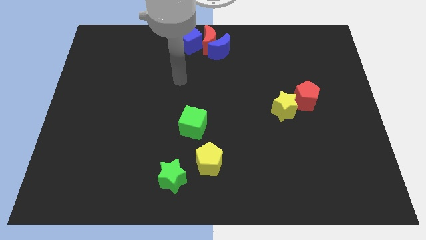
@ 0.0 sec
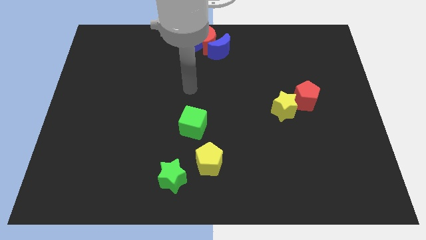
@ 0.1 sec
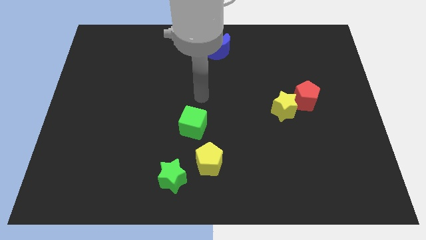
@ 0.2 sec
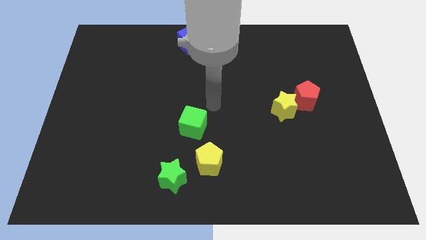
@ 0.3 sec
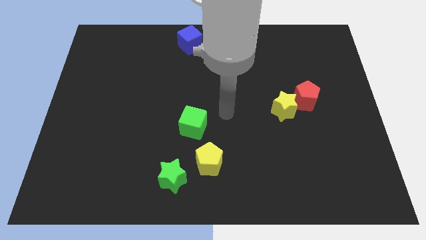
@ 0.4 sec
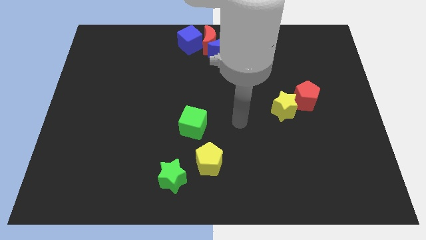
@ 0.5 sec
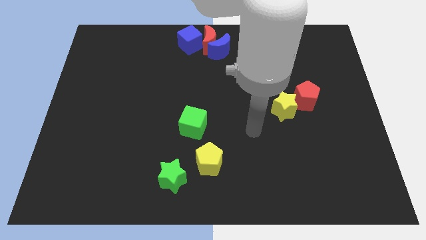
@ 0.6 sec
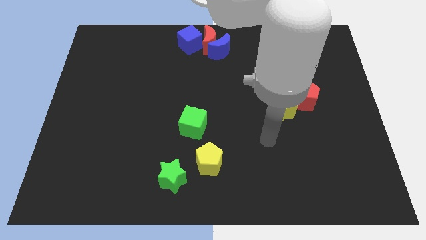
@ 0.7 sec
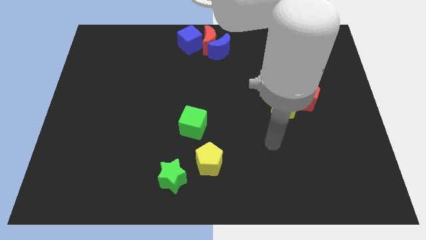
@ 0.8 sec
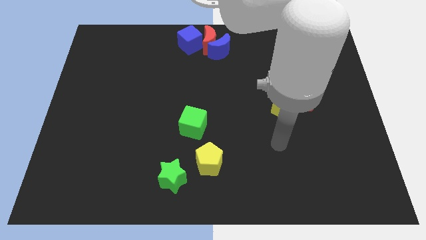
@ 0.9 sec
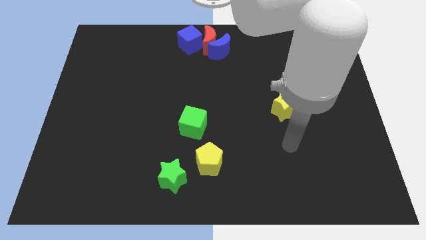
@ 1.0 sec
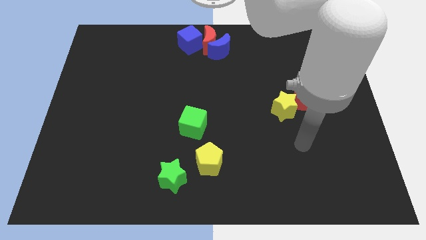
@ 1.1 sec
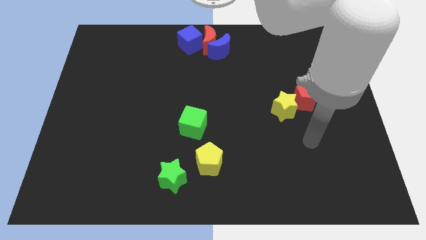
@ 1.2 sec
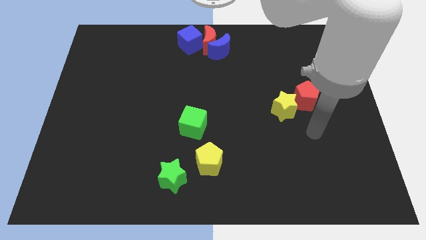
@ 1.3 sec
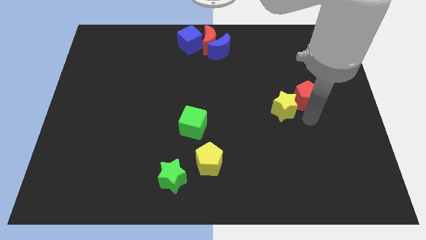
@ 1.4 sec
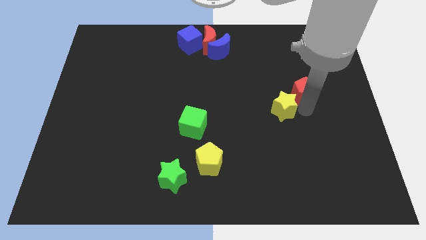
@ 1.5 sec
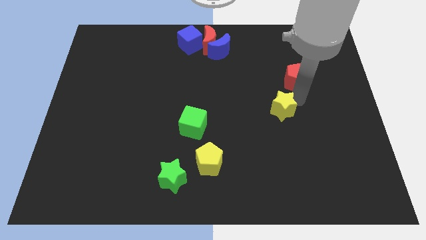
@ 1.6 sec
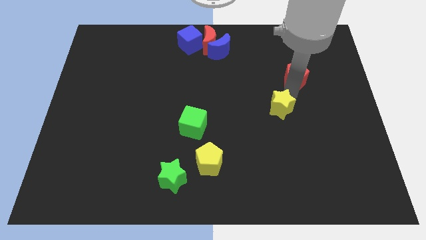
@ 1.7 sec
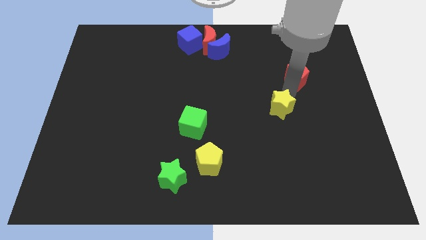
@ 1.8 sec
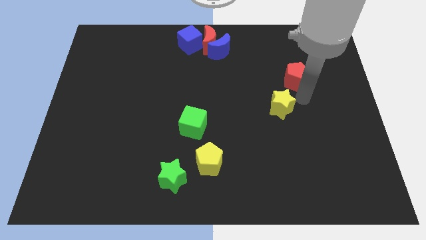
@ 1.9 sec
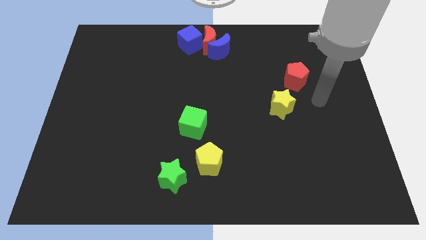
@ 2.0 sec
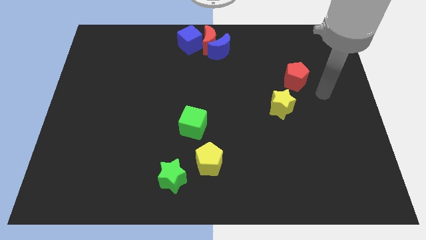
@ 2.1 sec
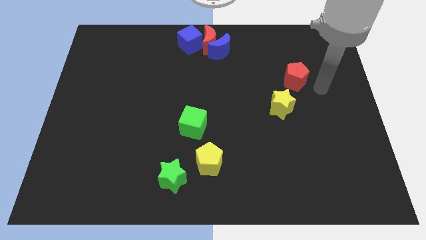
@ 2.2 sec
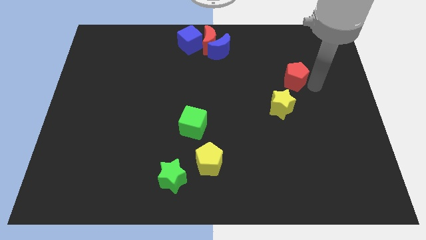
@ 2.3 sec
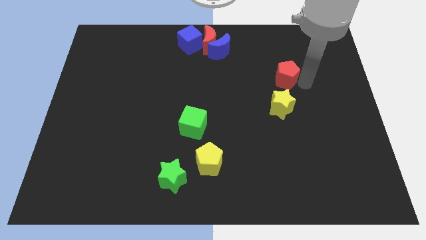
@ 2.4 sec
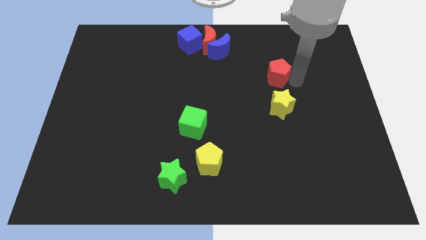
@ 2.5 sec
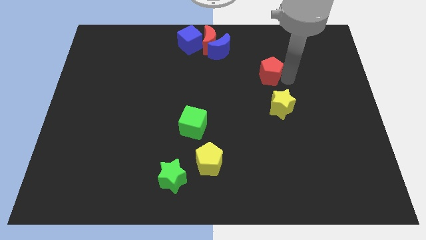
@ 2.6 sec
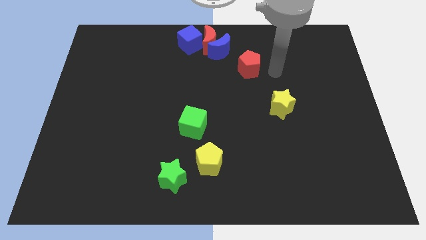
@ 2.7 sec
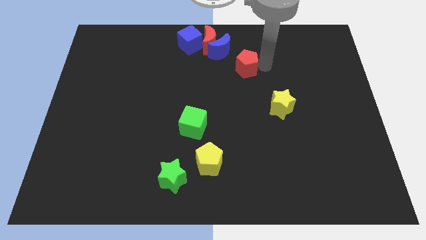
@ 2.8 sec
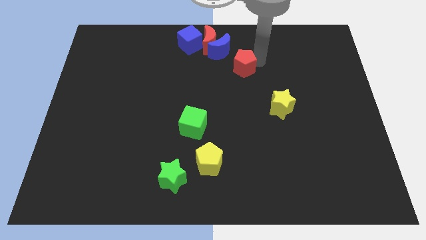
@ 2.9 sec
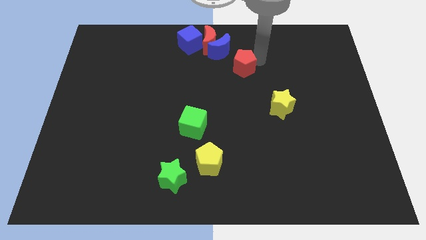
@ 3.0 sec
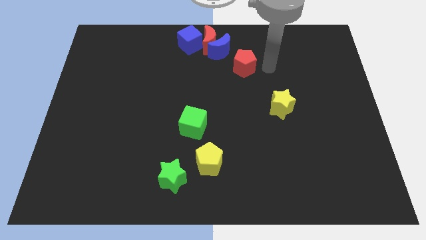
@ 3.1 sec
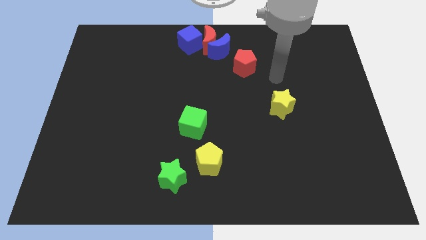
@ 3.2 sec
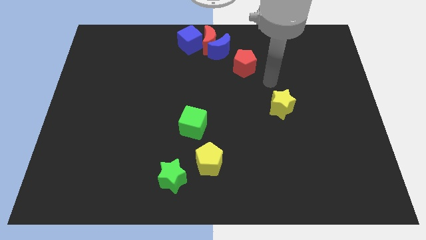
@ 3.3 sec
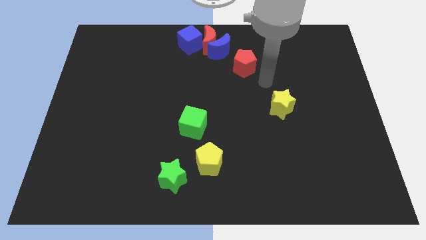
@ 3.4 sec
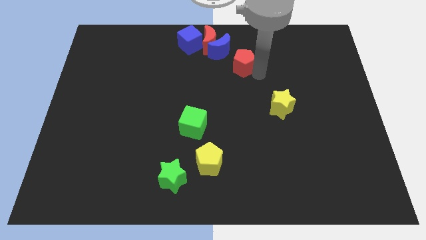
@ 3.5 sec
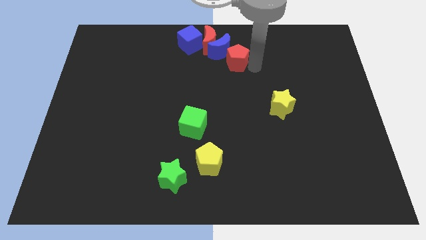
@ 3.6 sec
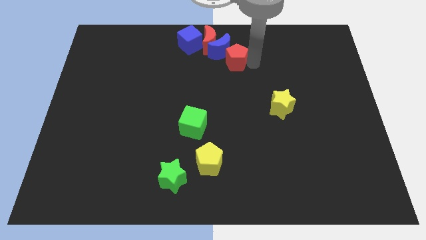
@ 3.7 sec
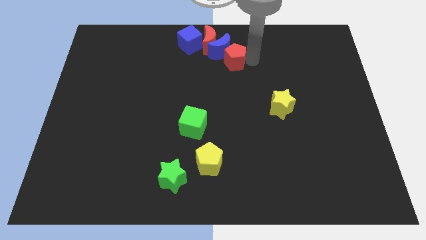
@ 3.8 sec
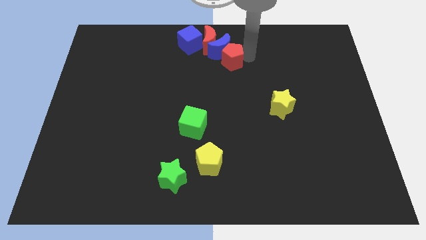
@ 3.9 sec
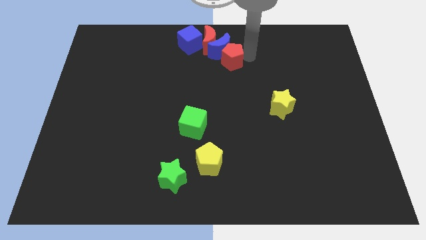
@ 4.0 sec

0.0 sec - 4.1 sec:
push red pentagon into group of blocks

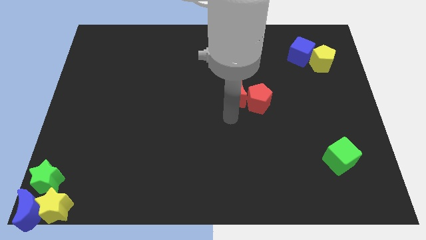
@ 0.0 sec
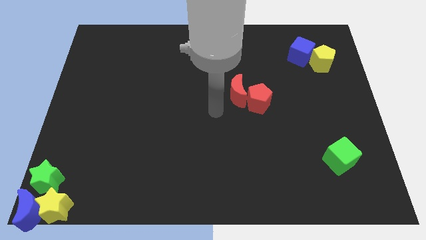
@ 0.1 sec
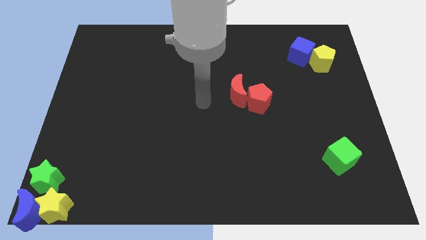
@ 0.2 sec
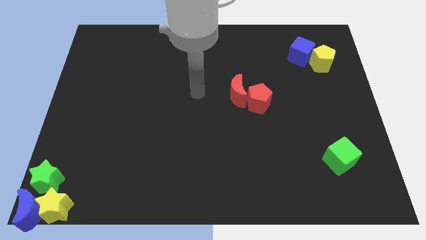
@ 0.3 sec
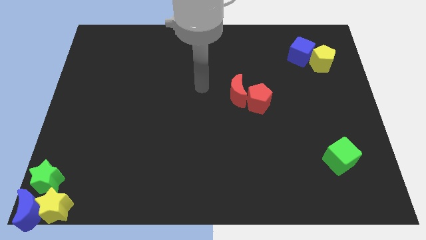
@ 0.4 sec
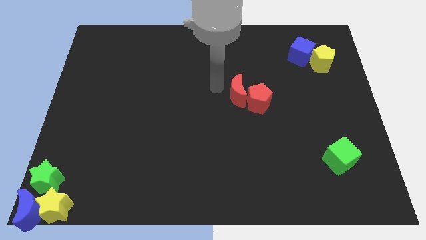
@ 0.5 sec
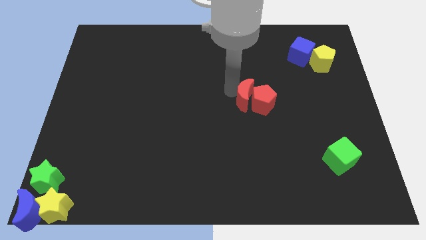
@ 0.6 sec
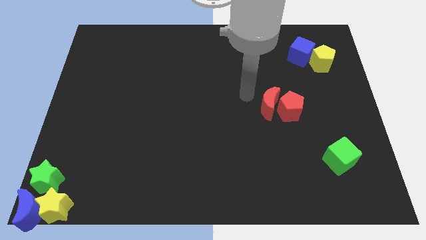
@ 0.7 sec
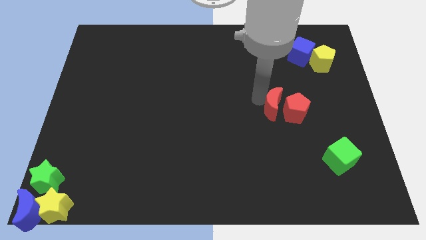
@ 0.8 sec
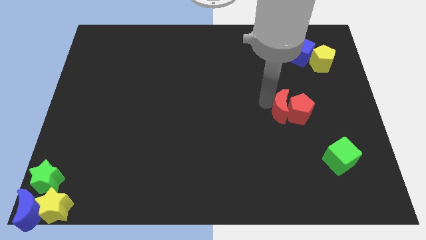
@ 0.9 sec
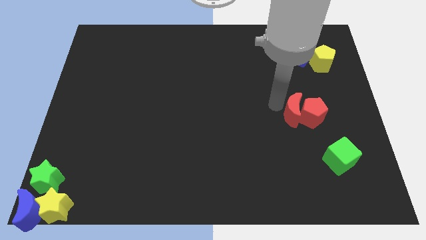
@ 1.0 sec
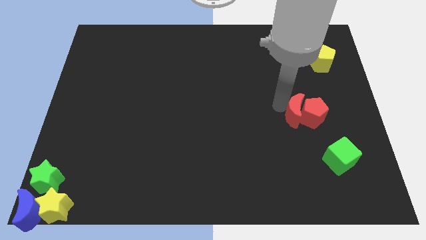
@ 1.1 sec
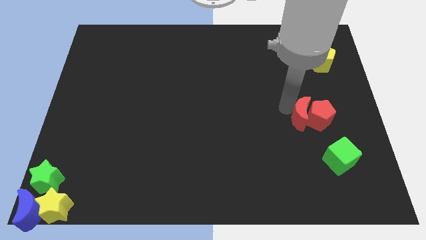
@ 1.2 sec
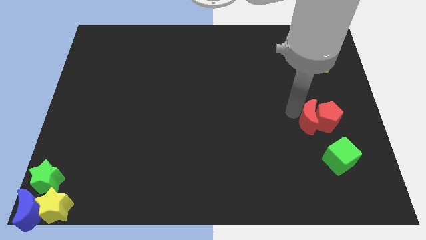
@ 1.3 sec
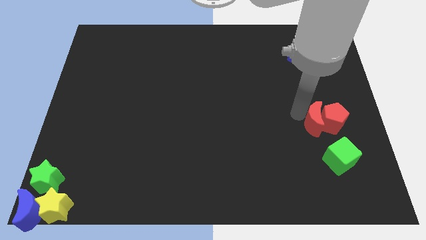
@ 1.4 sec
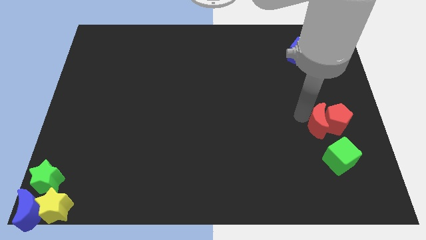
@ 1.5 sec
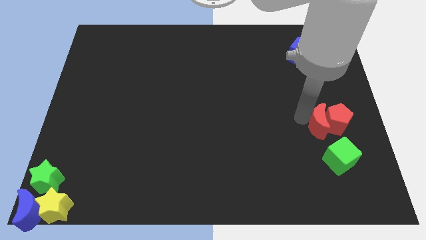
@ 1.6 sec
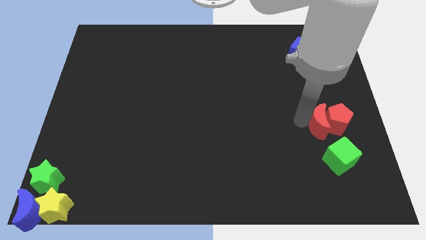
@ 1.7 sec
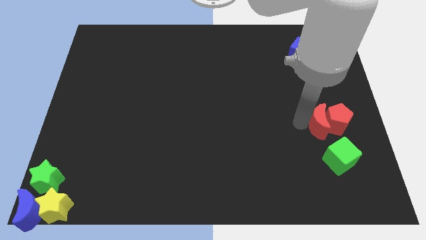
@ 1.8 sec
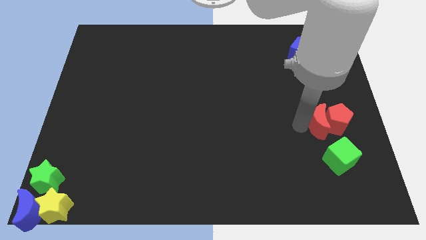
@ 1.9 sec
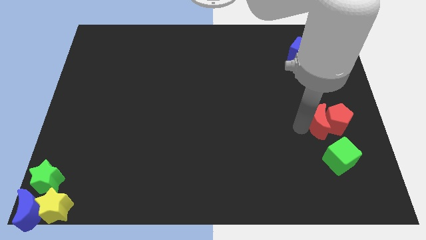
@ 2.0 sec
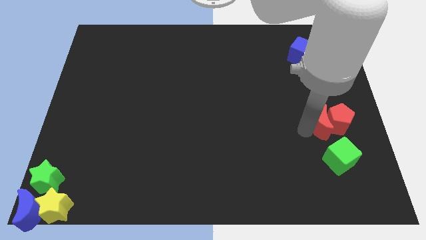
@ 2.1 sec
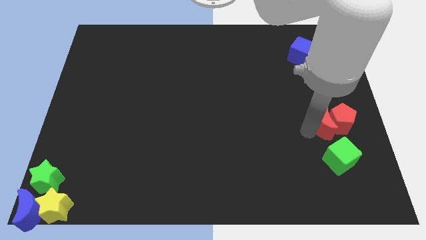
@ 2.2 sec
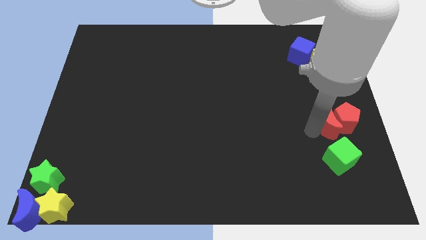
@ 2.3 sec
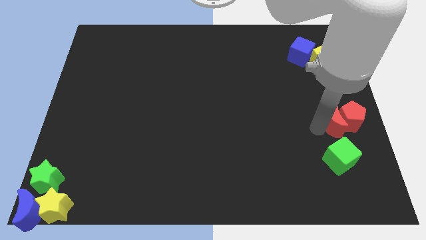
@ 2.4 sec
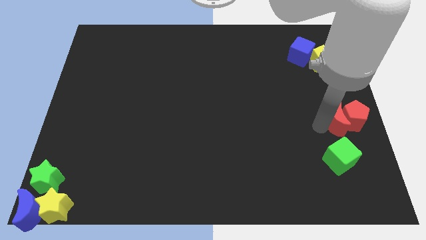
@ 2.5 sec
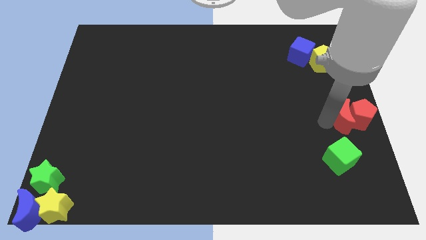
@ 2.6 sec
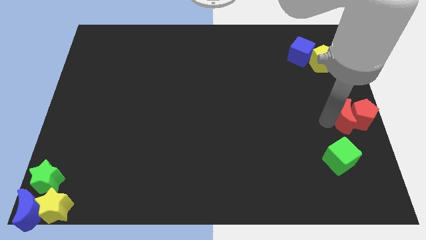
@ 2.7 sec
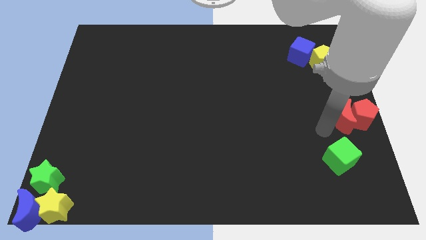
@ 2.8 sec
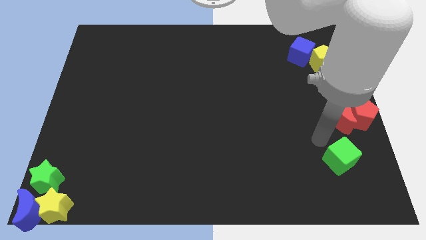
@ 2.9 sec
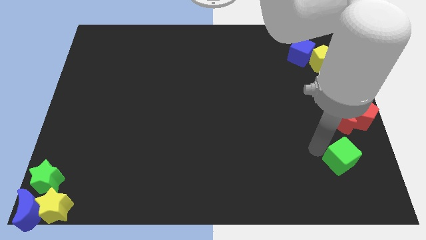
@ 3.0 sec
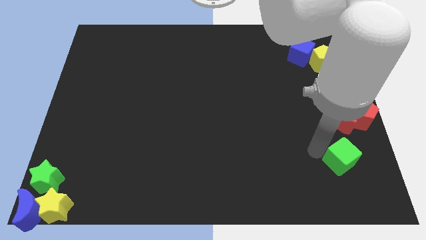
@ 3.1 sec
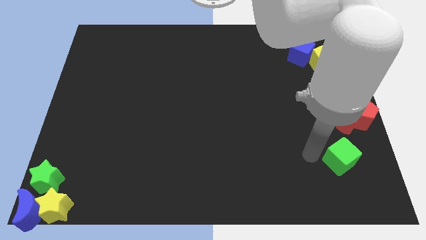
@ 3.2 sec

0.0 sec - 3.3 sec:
move the group of red blocks to the center right

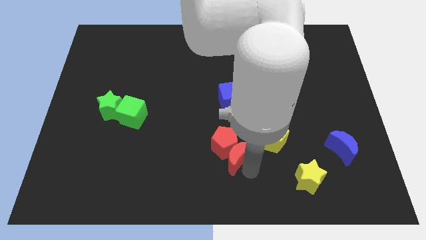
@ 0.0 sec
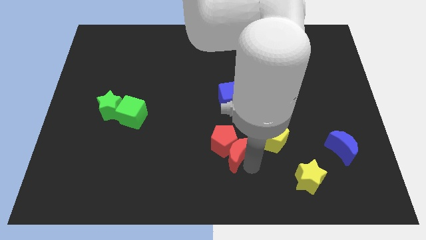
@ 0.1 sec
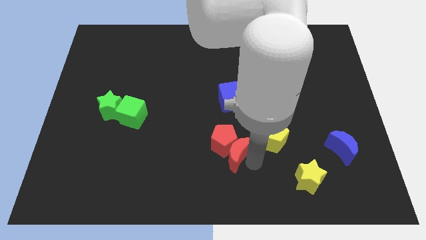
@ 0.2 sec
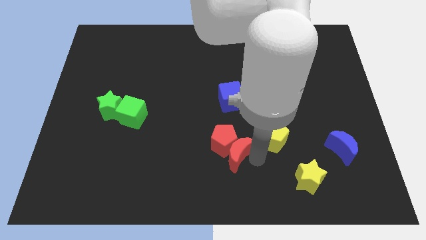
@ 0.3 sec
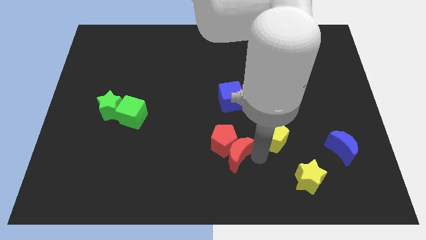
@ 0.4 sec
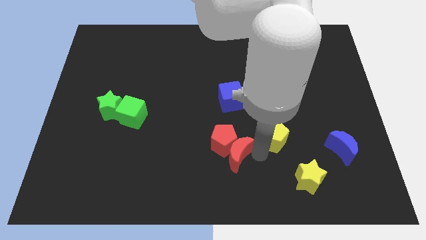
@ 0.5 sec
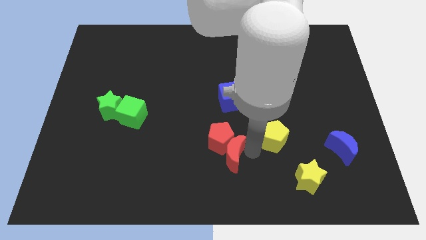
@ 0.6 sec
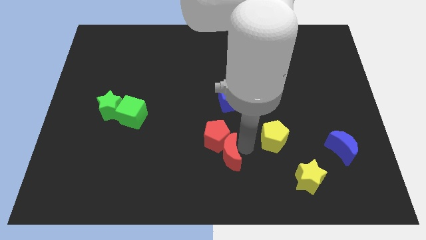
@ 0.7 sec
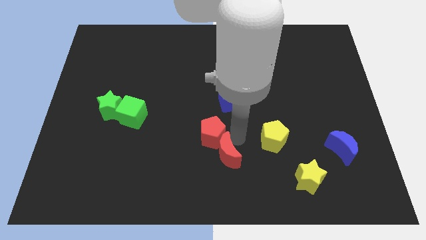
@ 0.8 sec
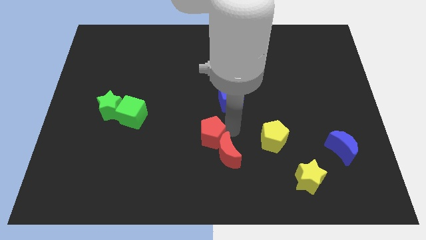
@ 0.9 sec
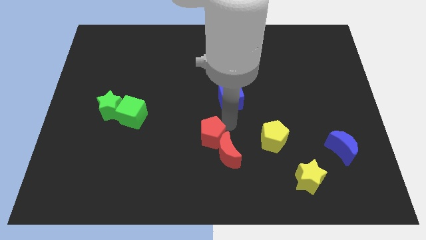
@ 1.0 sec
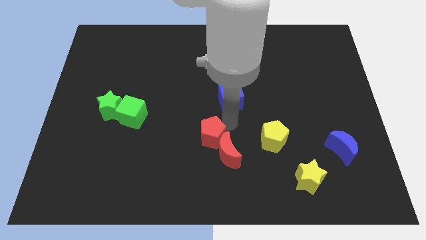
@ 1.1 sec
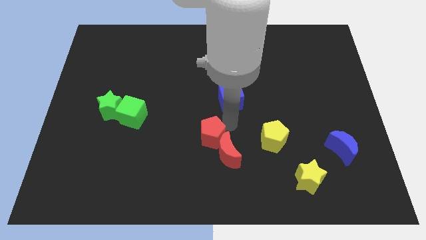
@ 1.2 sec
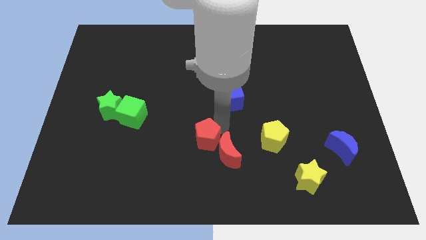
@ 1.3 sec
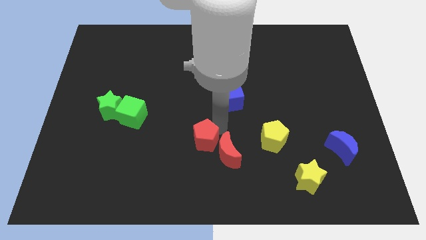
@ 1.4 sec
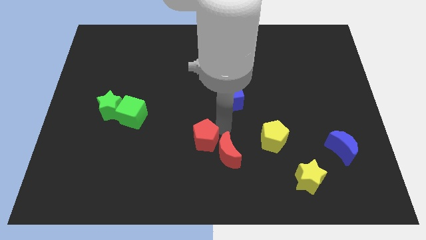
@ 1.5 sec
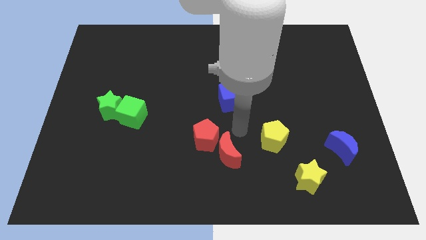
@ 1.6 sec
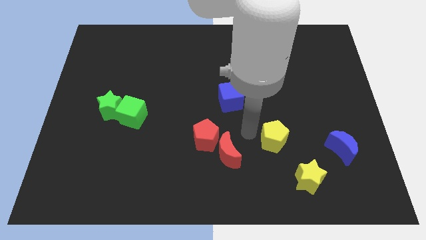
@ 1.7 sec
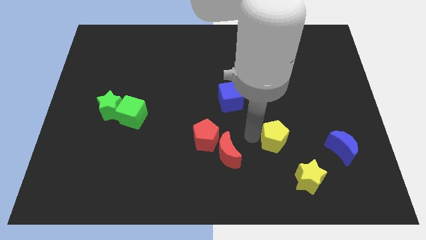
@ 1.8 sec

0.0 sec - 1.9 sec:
slightly move the red blocks towards up
